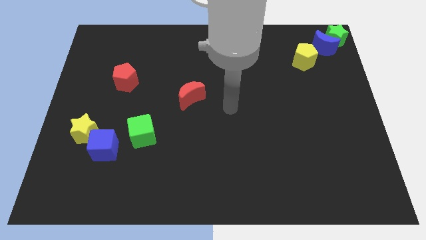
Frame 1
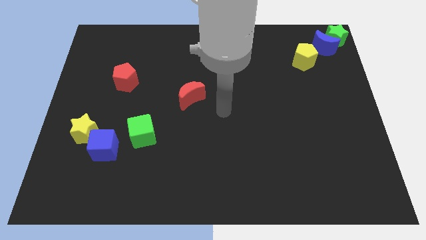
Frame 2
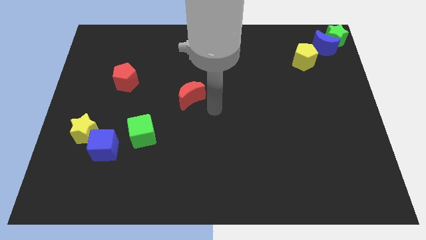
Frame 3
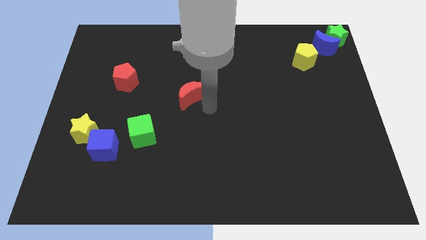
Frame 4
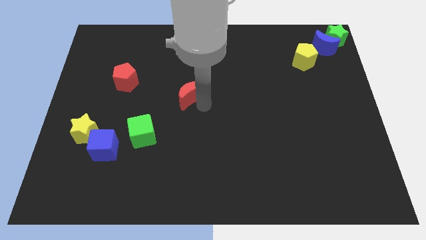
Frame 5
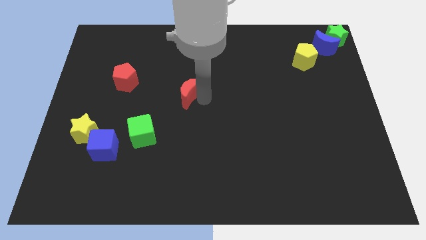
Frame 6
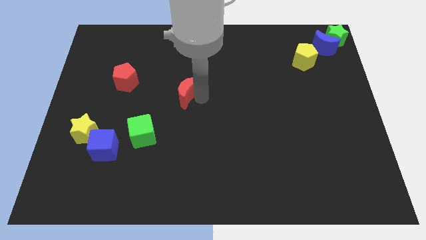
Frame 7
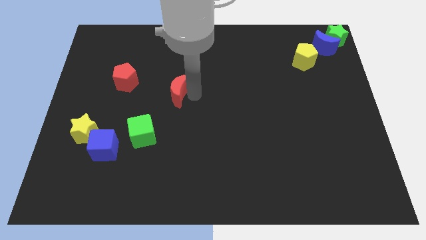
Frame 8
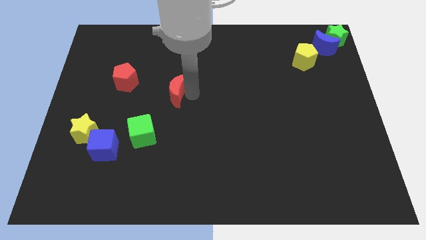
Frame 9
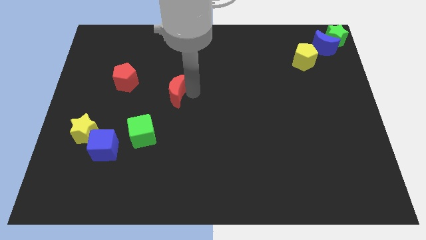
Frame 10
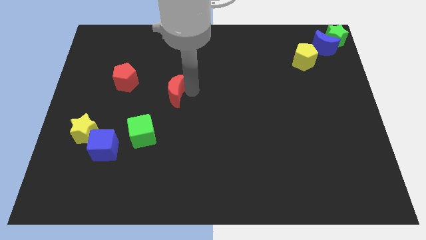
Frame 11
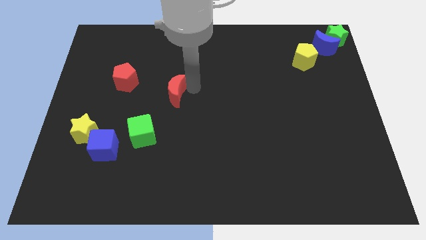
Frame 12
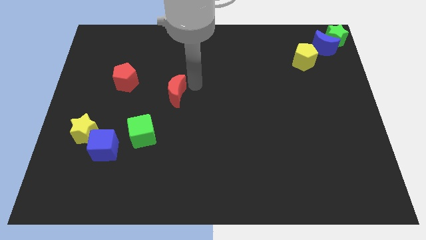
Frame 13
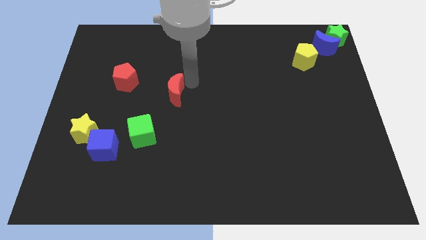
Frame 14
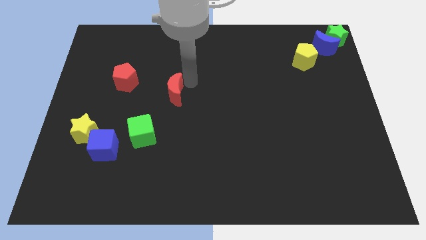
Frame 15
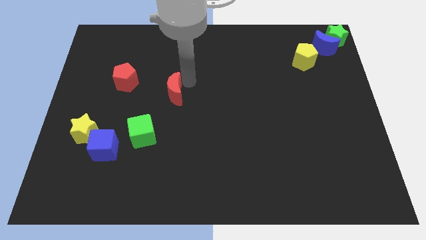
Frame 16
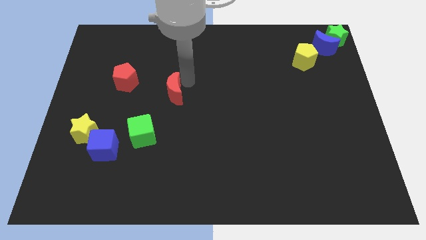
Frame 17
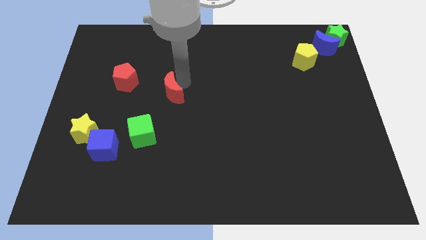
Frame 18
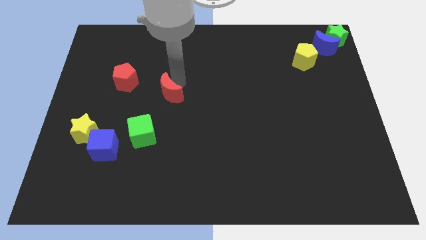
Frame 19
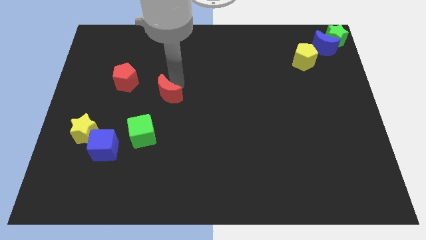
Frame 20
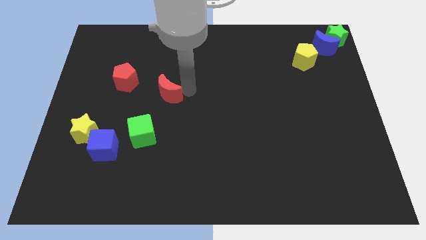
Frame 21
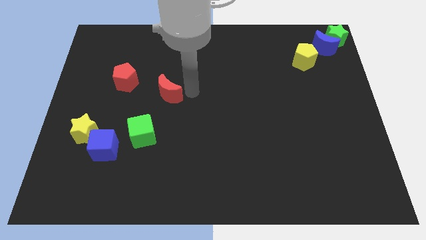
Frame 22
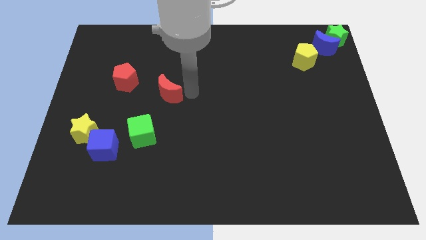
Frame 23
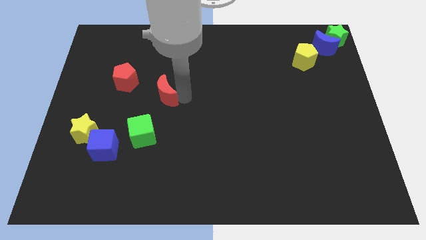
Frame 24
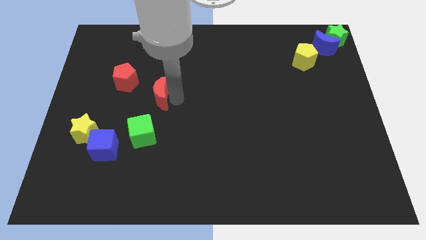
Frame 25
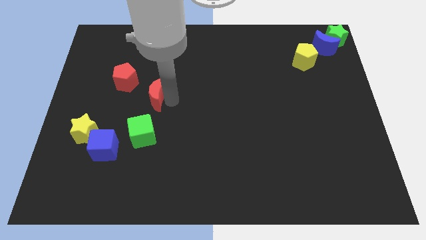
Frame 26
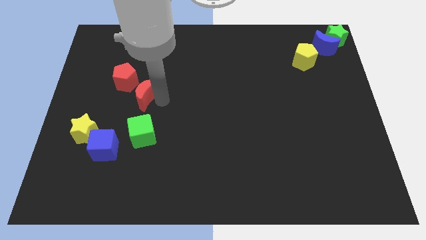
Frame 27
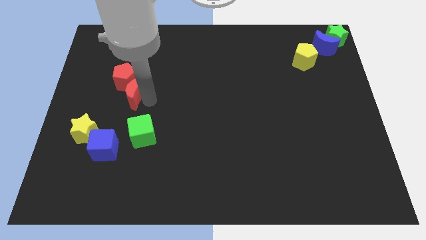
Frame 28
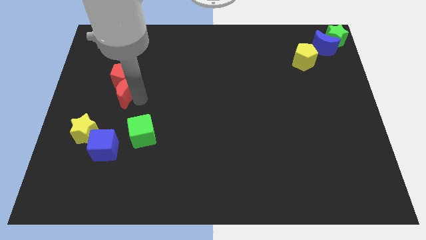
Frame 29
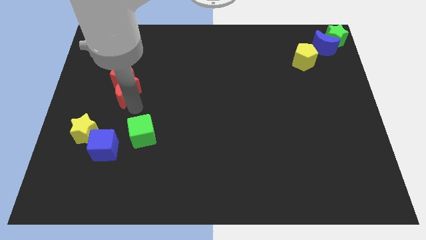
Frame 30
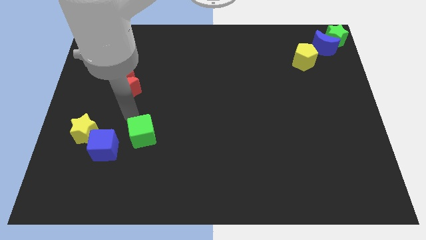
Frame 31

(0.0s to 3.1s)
make the red crescent to touch the red pentagon

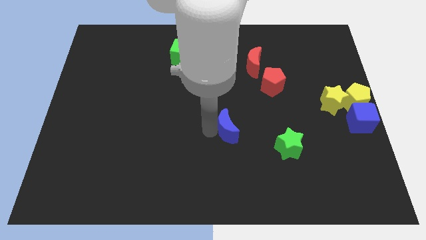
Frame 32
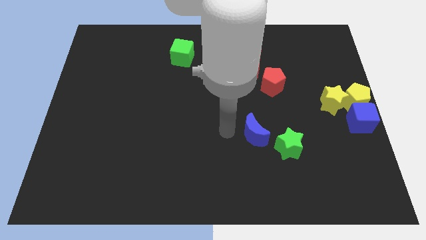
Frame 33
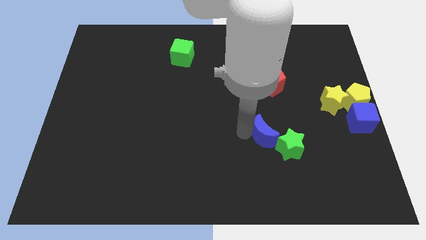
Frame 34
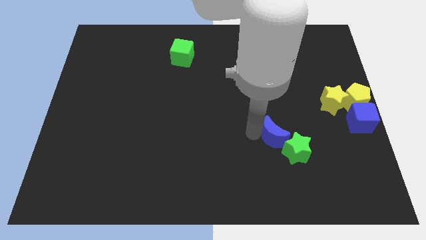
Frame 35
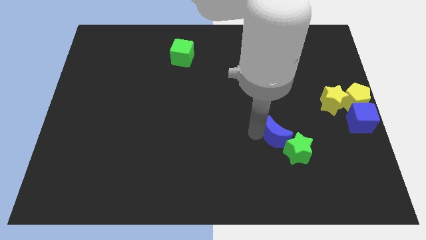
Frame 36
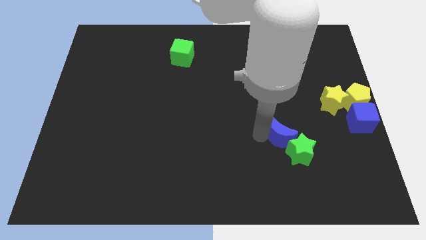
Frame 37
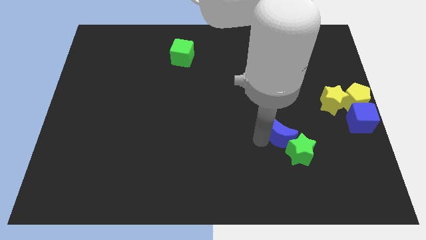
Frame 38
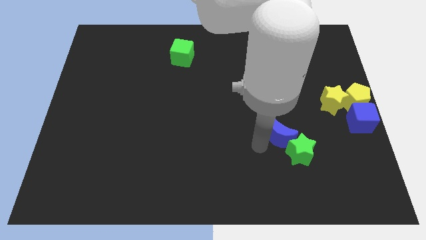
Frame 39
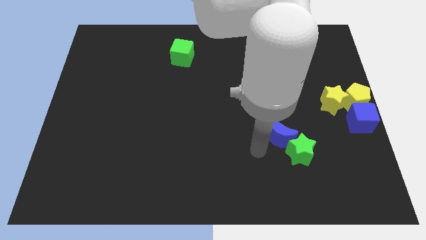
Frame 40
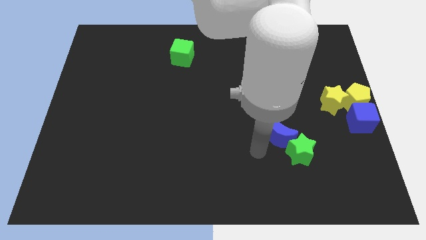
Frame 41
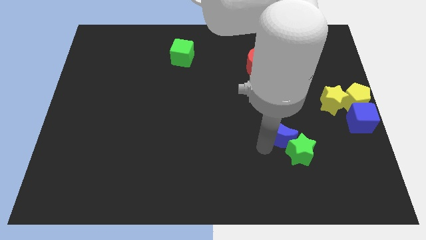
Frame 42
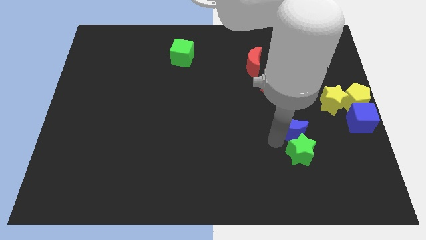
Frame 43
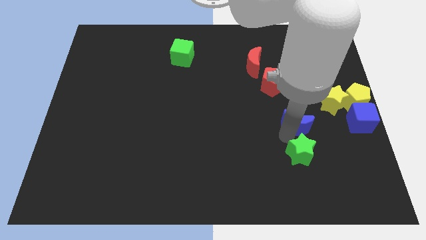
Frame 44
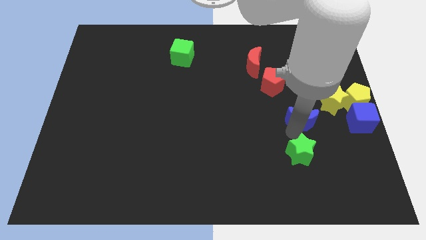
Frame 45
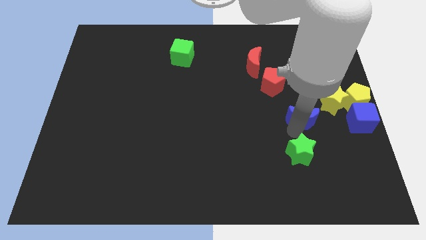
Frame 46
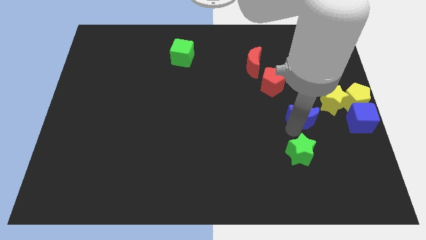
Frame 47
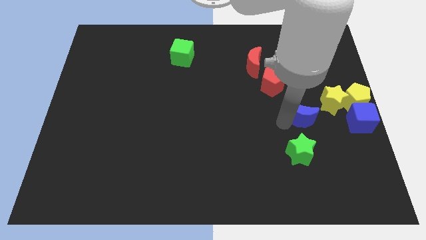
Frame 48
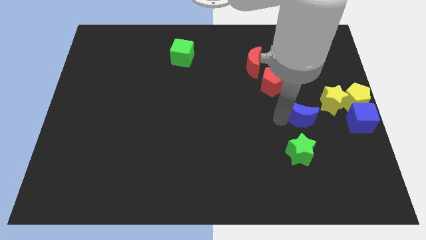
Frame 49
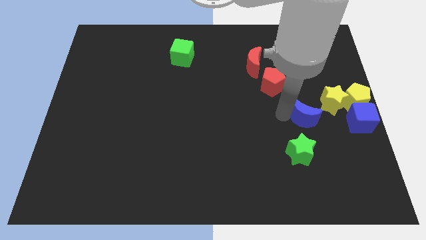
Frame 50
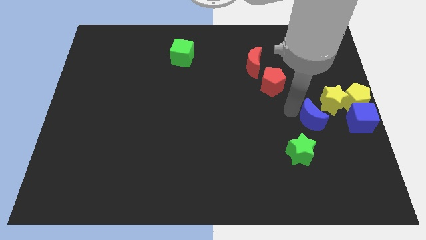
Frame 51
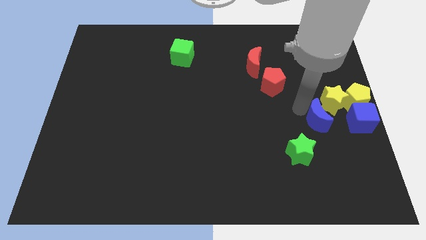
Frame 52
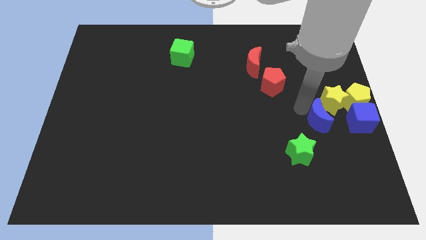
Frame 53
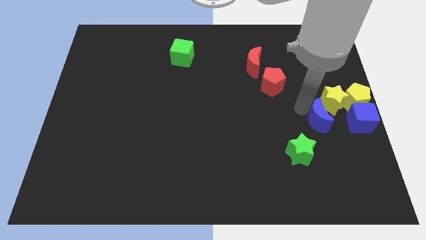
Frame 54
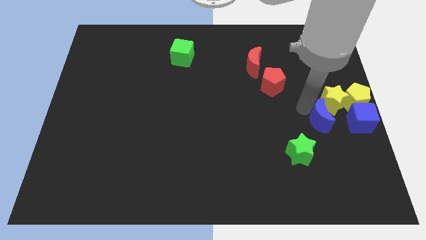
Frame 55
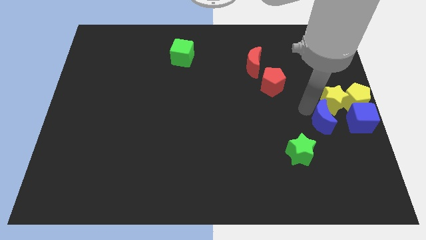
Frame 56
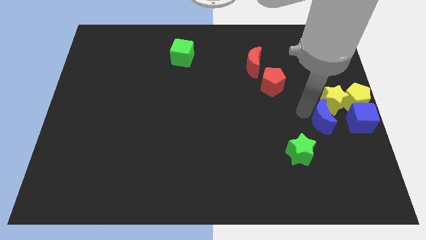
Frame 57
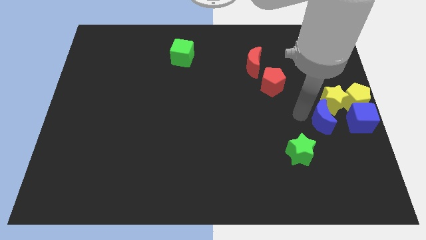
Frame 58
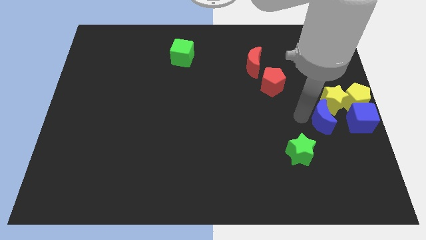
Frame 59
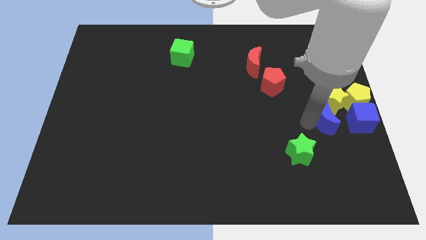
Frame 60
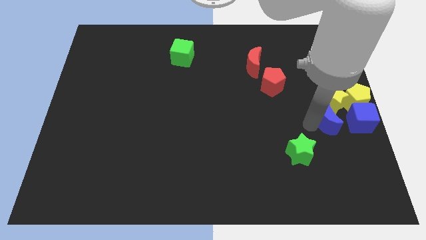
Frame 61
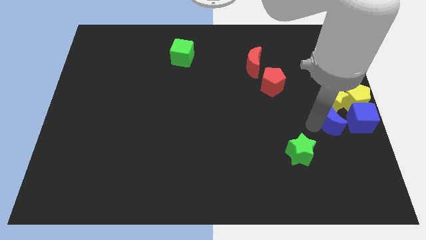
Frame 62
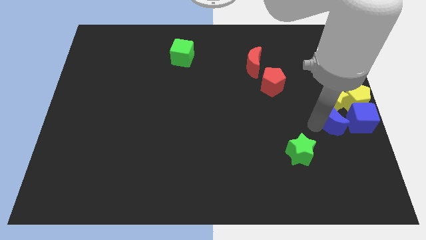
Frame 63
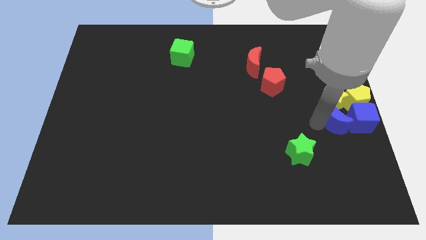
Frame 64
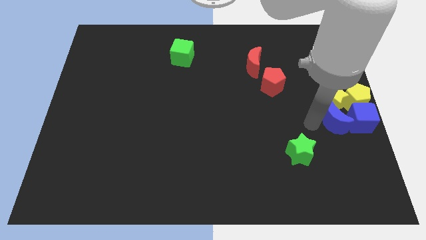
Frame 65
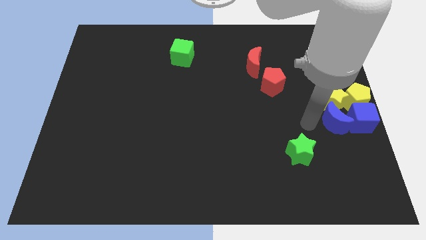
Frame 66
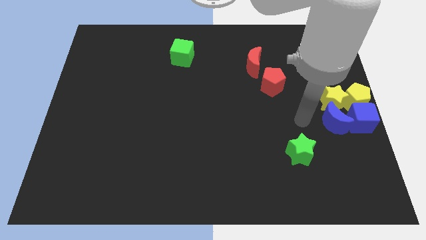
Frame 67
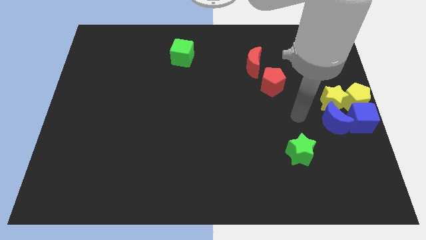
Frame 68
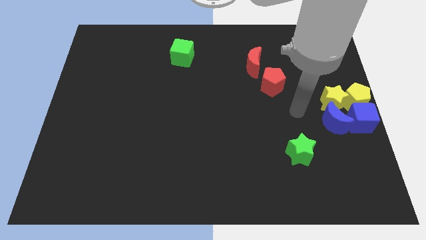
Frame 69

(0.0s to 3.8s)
push blue moon into blue cube

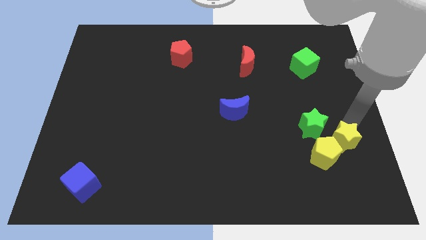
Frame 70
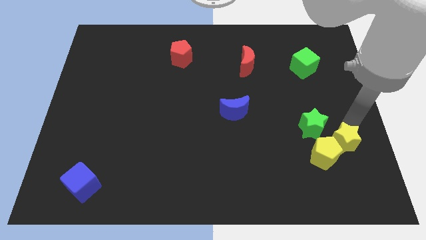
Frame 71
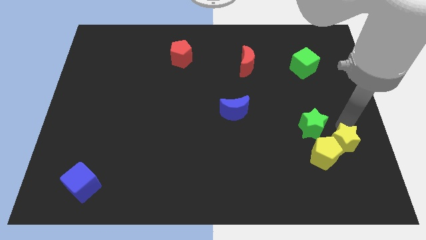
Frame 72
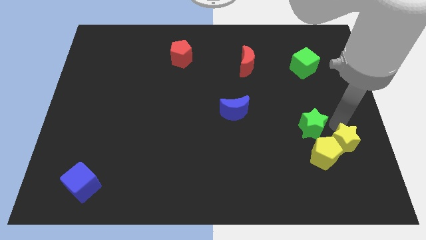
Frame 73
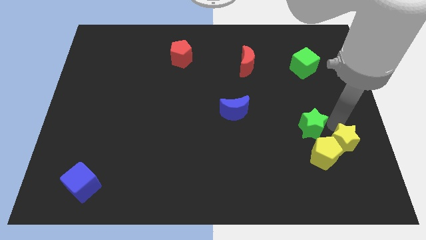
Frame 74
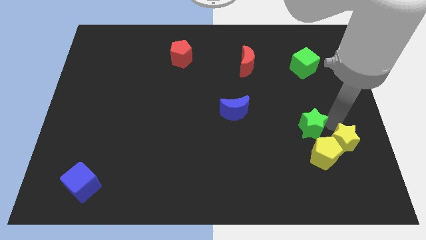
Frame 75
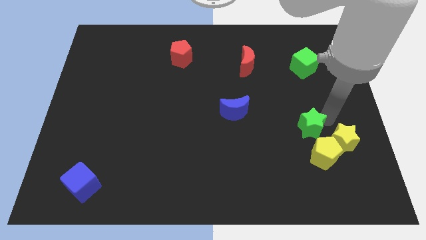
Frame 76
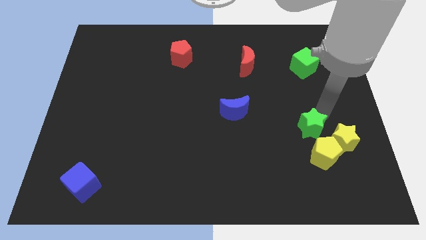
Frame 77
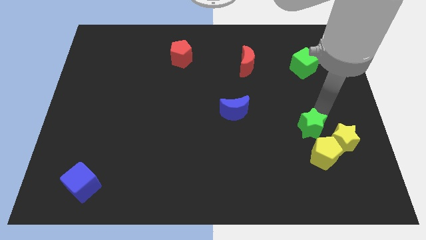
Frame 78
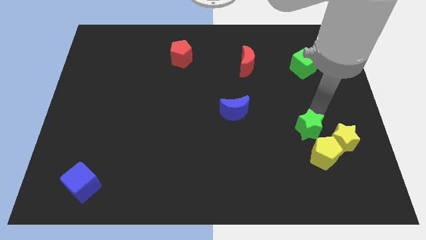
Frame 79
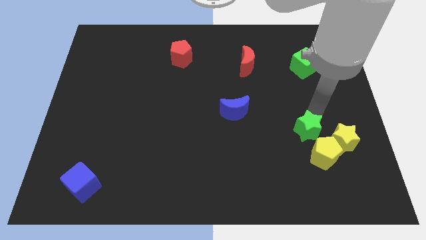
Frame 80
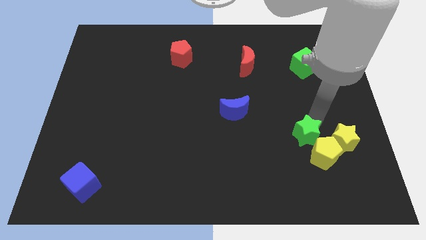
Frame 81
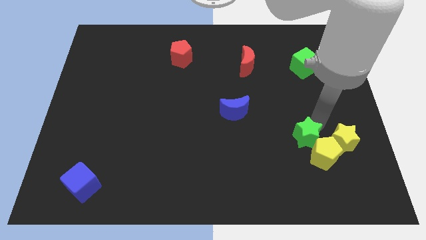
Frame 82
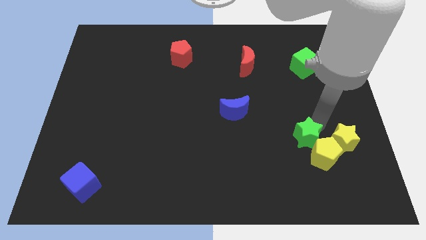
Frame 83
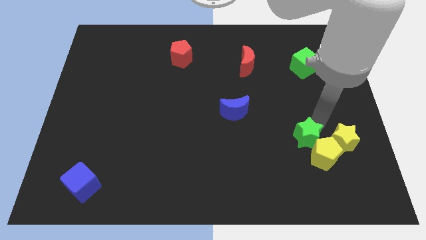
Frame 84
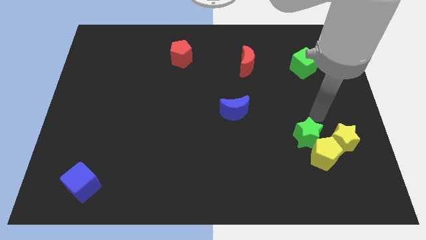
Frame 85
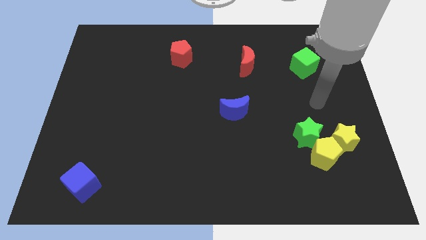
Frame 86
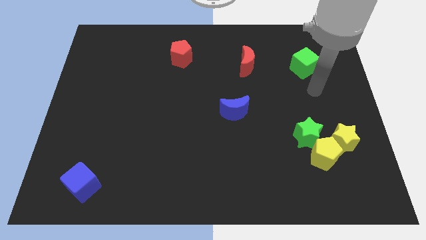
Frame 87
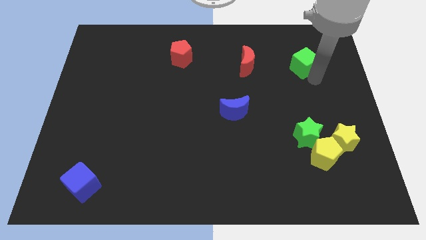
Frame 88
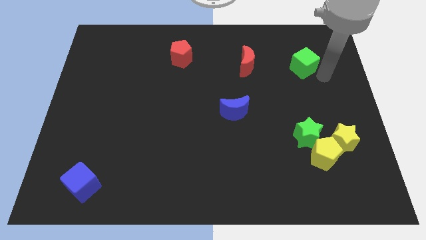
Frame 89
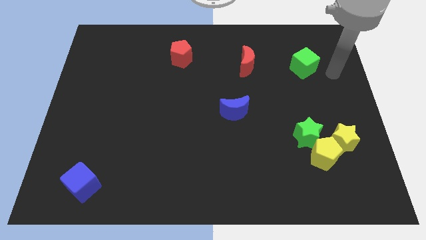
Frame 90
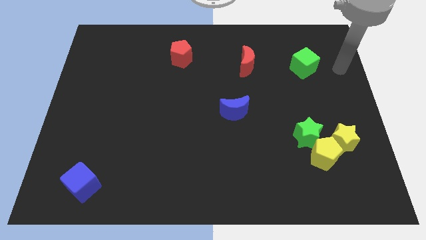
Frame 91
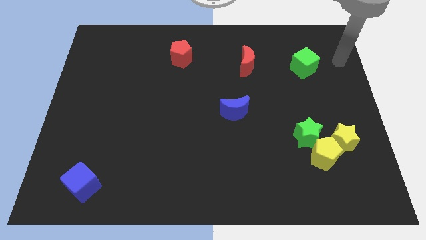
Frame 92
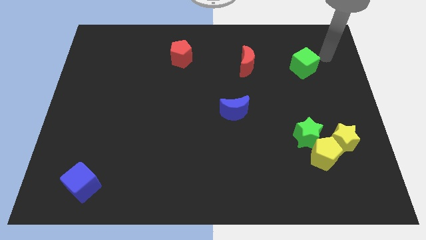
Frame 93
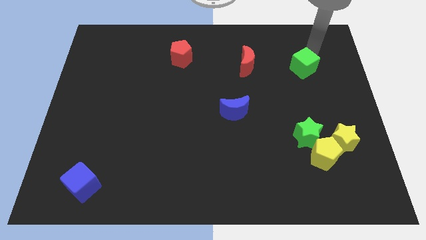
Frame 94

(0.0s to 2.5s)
slightly push down the green star and yellow star
